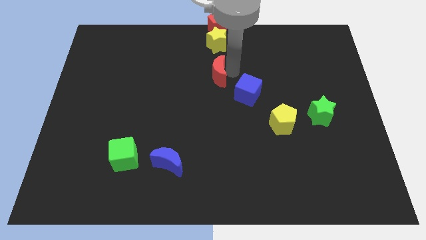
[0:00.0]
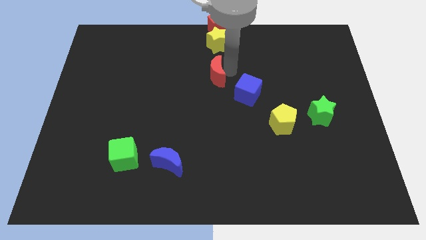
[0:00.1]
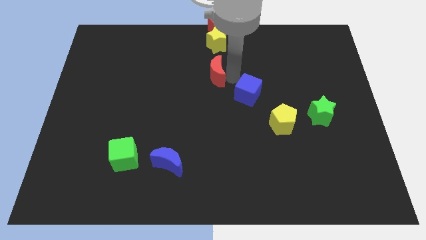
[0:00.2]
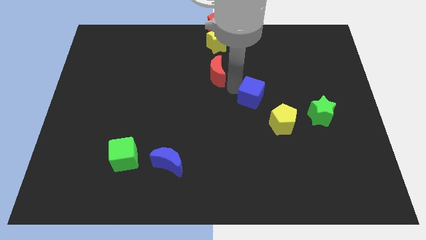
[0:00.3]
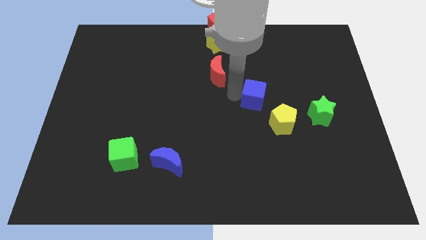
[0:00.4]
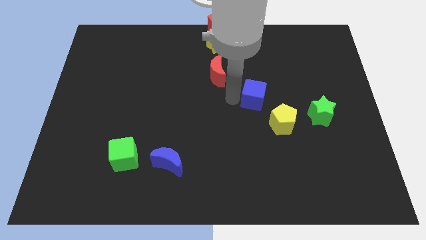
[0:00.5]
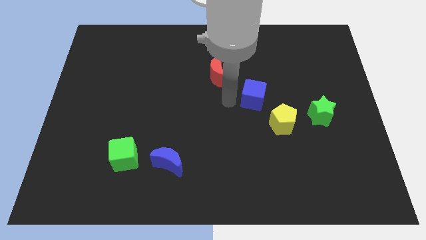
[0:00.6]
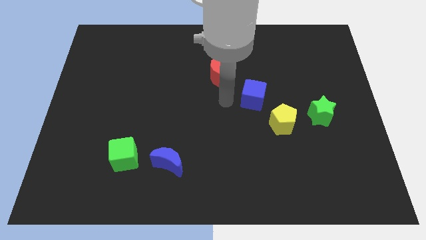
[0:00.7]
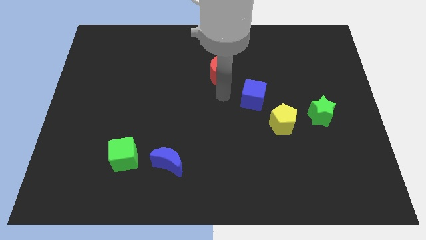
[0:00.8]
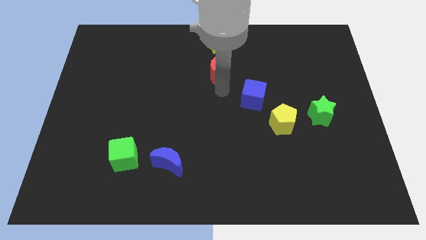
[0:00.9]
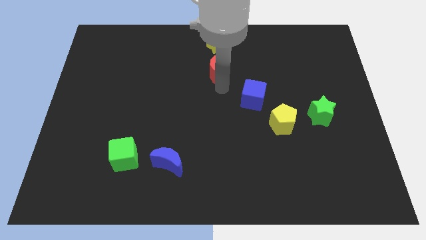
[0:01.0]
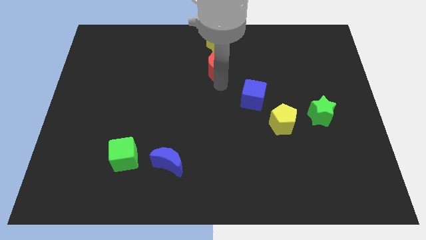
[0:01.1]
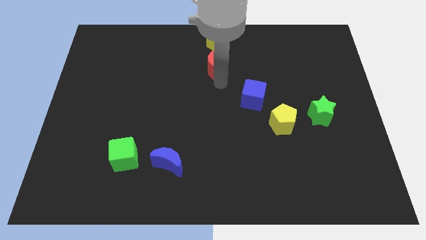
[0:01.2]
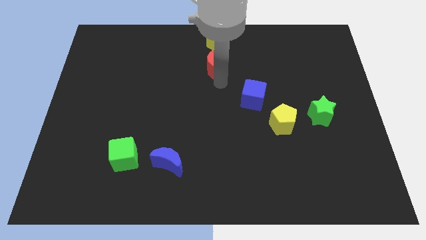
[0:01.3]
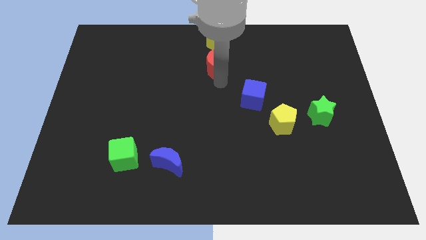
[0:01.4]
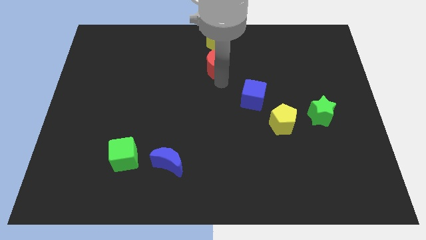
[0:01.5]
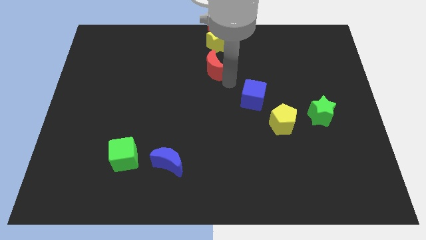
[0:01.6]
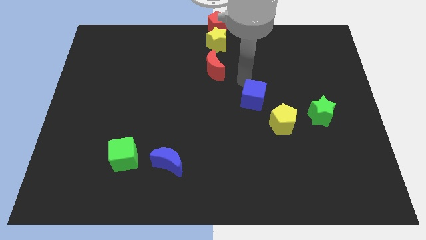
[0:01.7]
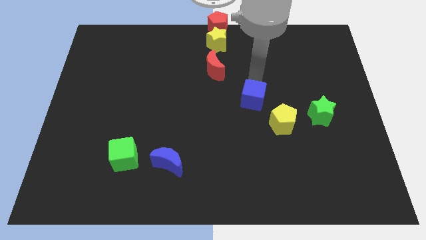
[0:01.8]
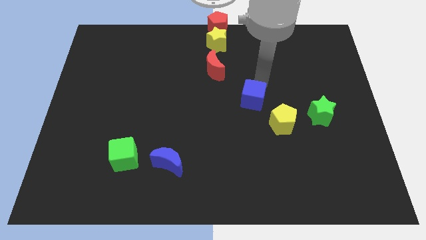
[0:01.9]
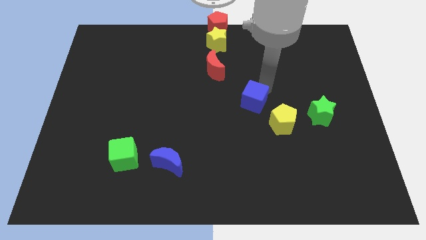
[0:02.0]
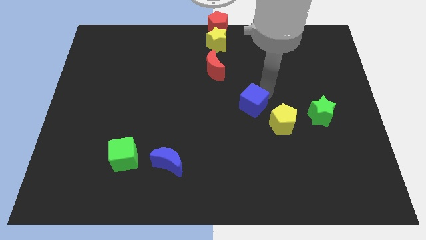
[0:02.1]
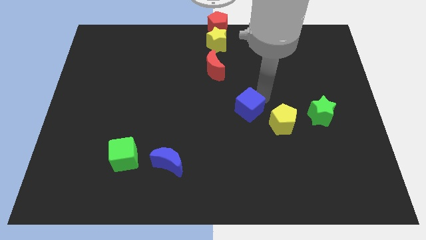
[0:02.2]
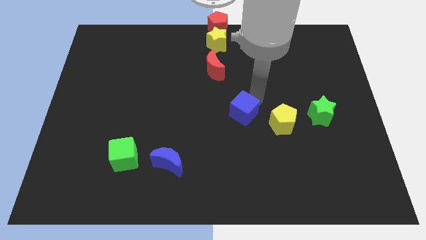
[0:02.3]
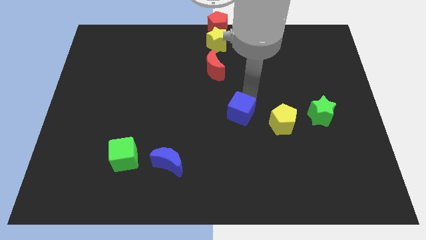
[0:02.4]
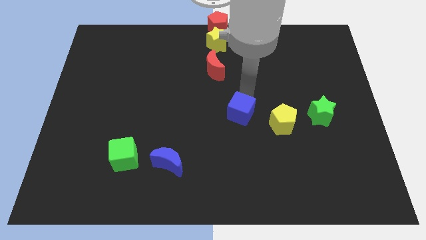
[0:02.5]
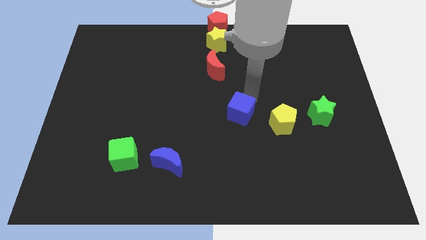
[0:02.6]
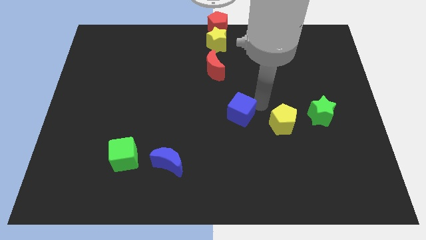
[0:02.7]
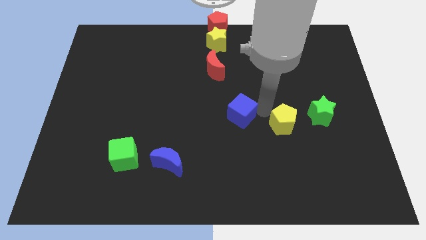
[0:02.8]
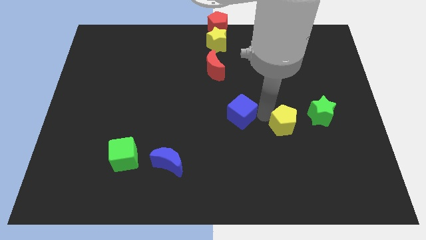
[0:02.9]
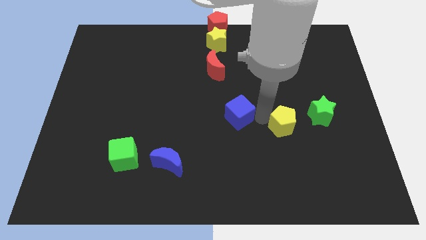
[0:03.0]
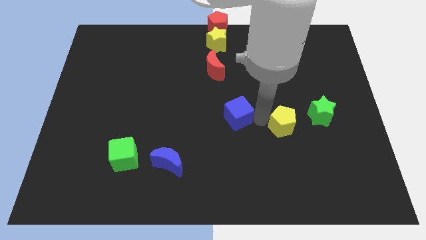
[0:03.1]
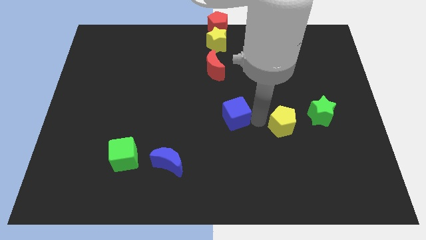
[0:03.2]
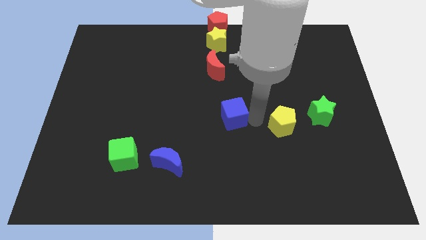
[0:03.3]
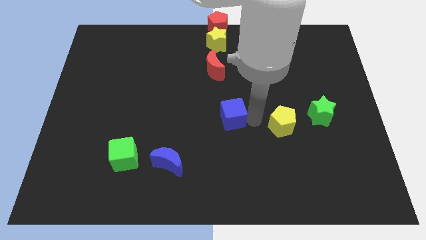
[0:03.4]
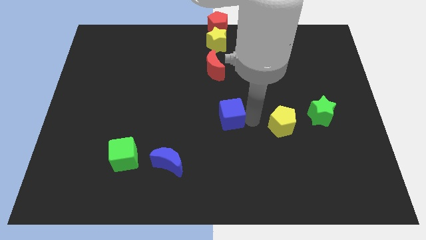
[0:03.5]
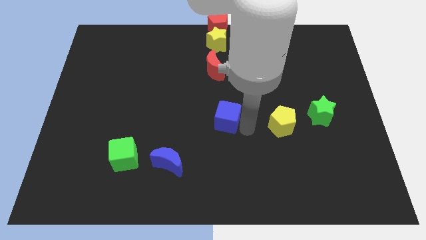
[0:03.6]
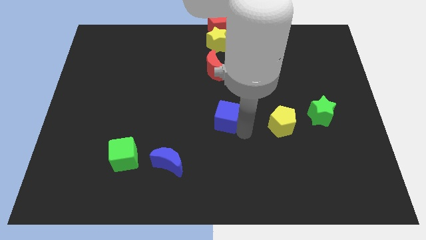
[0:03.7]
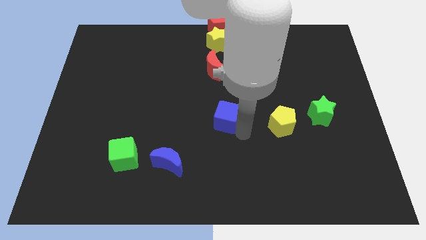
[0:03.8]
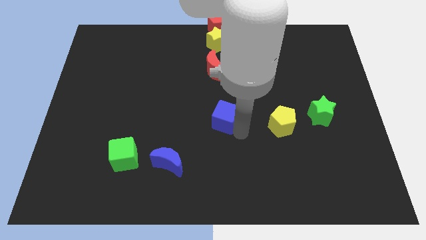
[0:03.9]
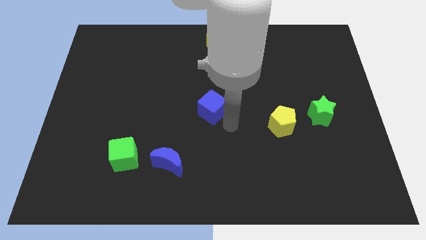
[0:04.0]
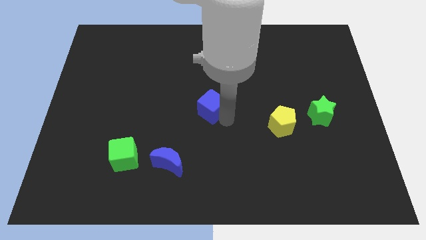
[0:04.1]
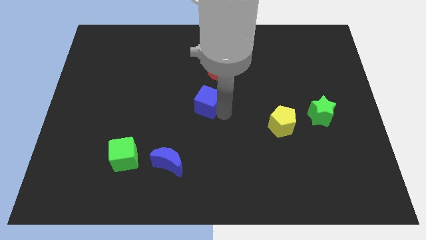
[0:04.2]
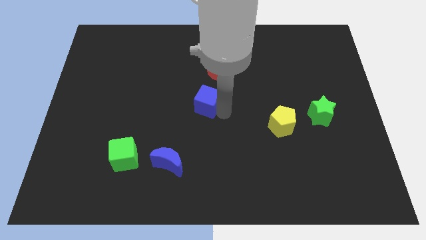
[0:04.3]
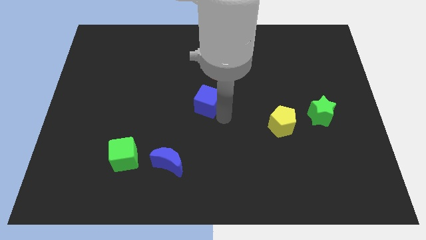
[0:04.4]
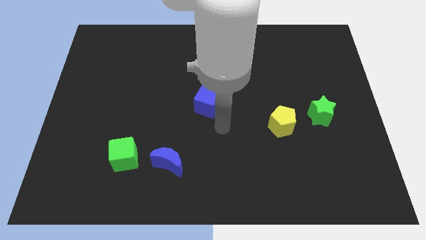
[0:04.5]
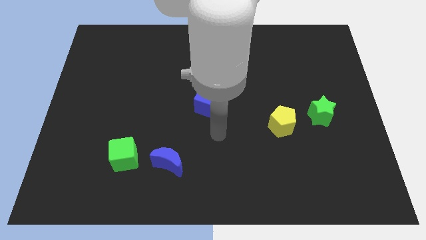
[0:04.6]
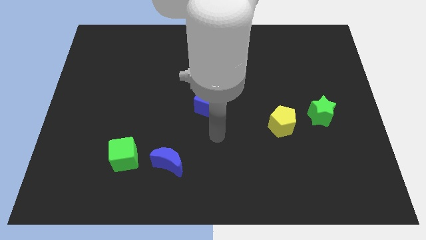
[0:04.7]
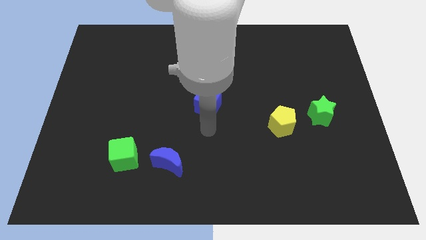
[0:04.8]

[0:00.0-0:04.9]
move the blue cube to the center of the board

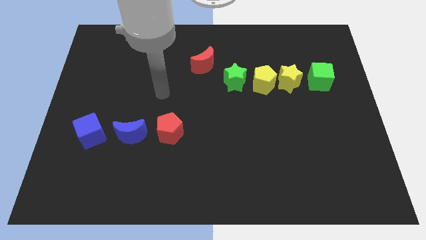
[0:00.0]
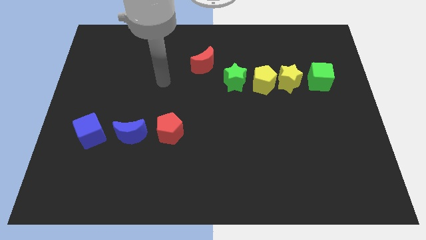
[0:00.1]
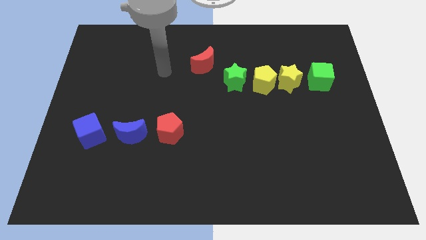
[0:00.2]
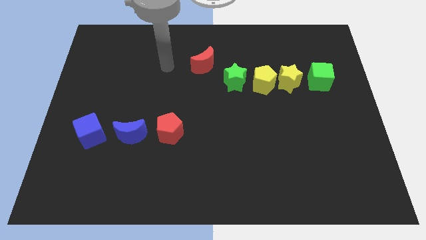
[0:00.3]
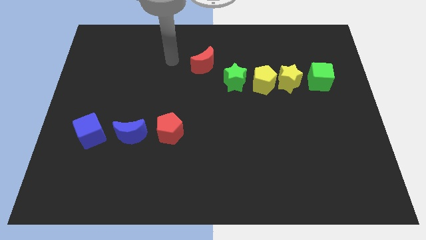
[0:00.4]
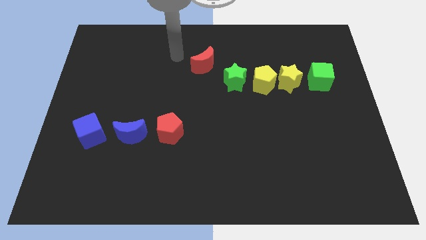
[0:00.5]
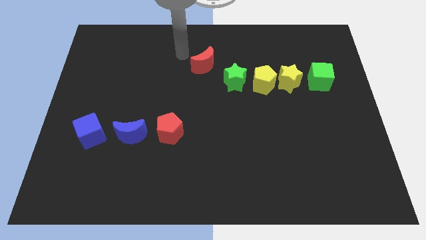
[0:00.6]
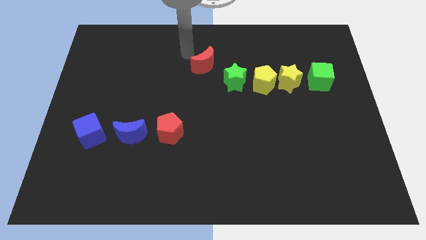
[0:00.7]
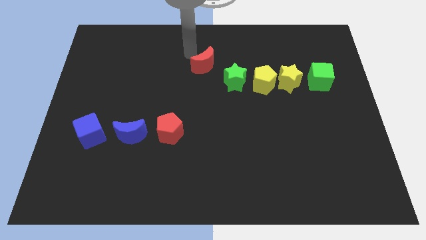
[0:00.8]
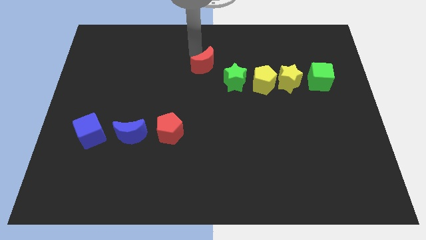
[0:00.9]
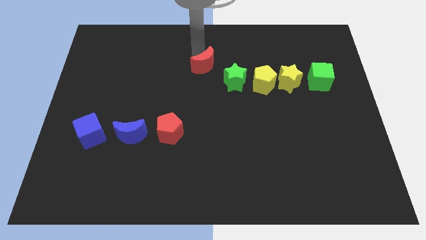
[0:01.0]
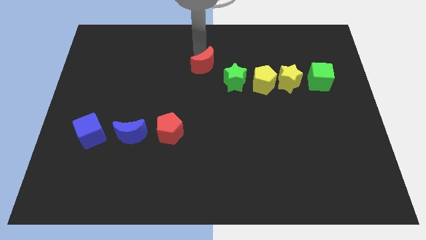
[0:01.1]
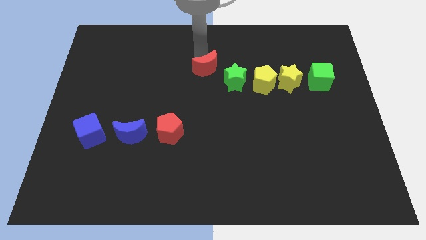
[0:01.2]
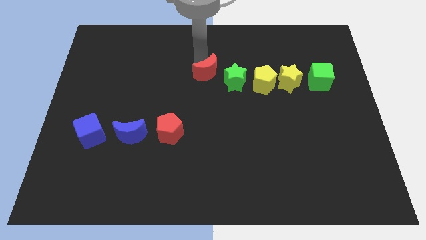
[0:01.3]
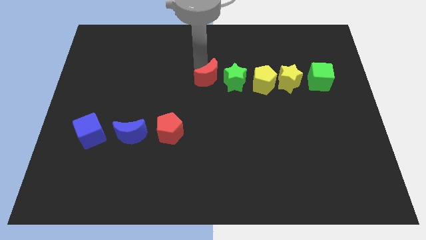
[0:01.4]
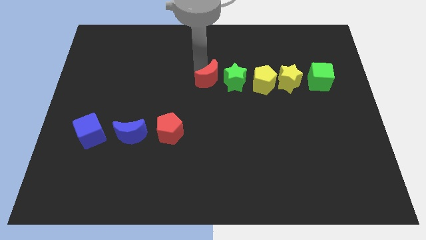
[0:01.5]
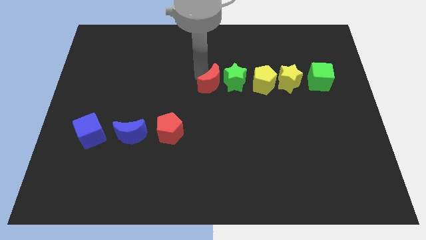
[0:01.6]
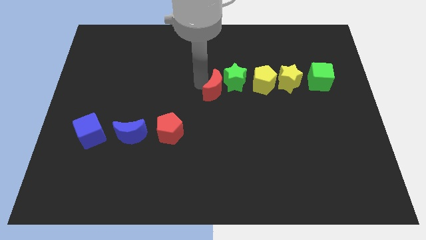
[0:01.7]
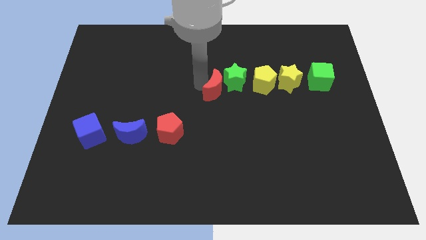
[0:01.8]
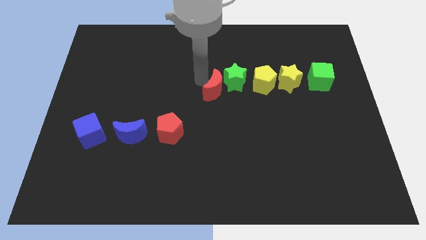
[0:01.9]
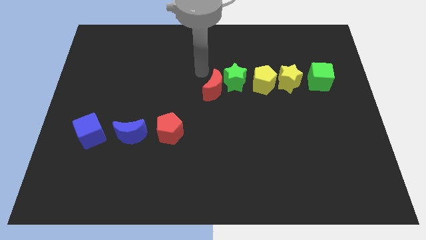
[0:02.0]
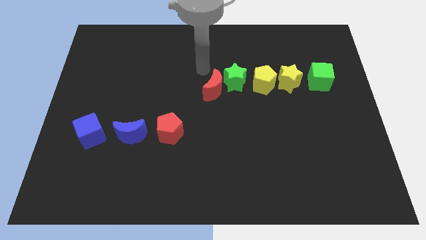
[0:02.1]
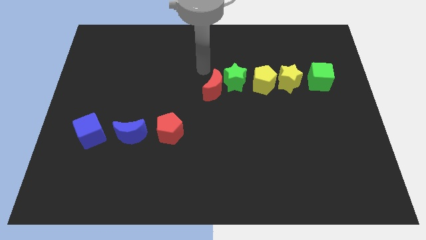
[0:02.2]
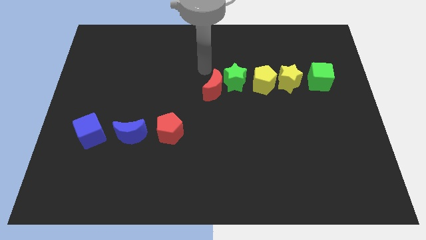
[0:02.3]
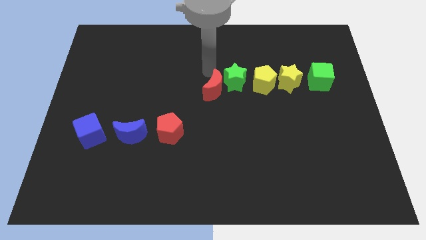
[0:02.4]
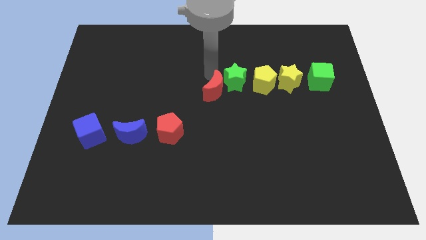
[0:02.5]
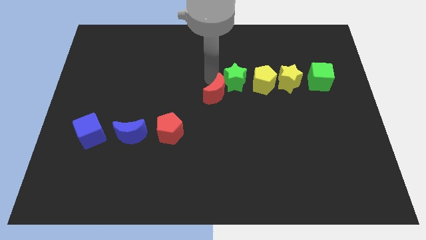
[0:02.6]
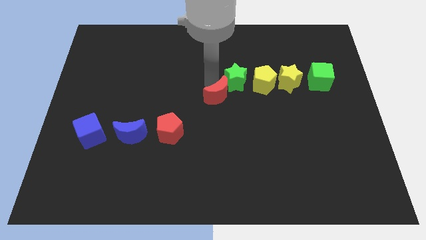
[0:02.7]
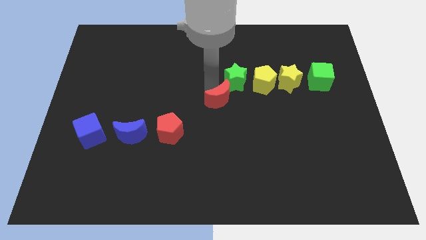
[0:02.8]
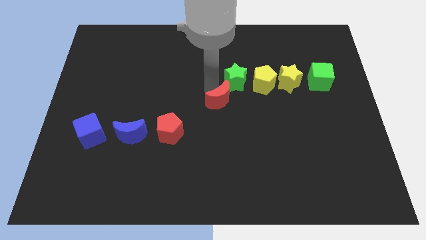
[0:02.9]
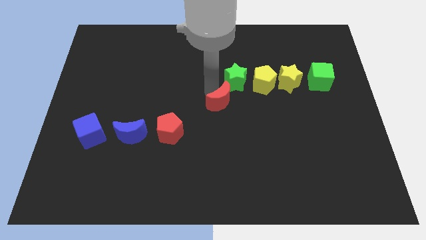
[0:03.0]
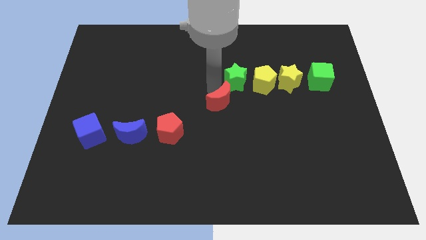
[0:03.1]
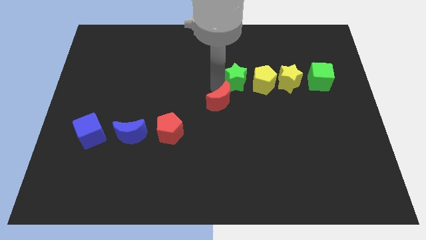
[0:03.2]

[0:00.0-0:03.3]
move the red crescent slightly to the center

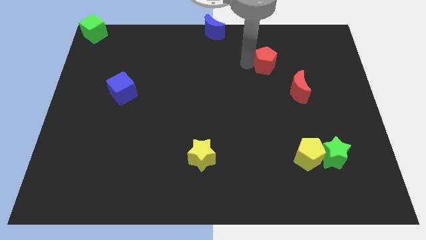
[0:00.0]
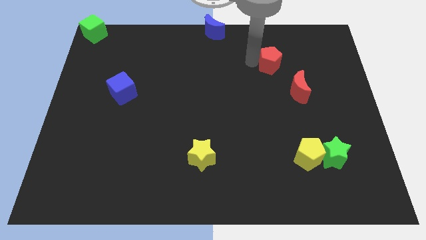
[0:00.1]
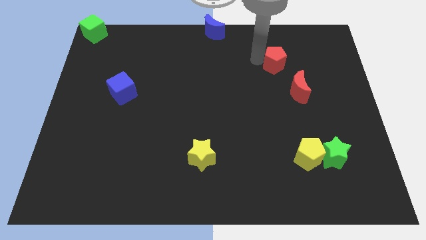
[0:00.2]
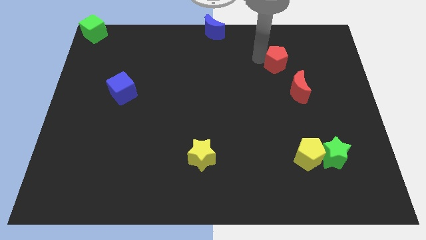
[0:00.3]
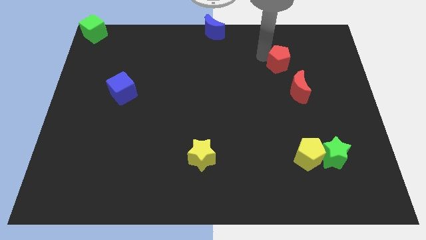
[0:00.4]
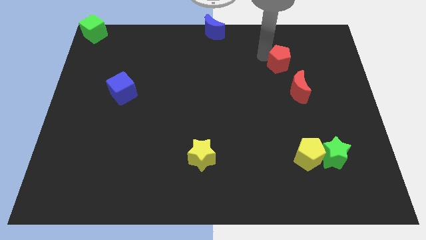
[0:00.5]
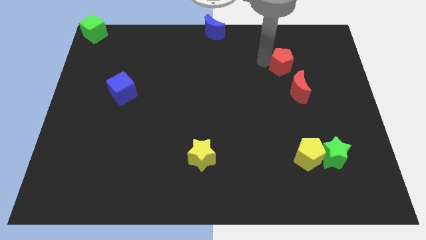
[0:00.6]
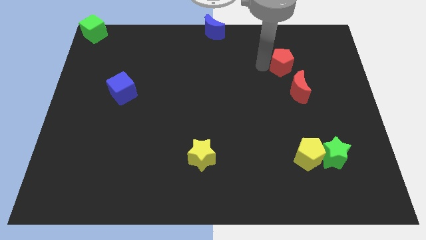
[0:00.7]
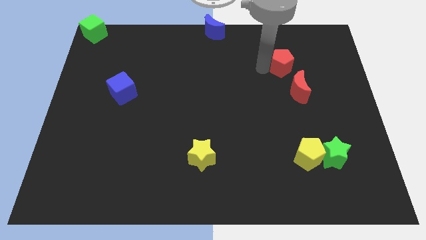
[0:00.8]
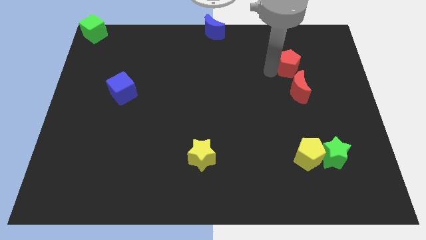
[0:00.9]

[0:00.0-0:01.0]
push red pentagon into the red moon
